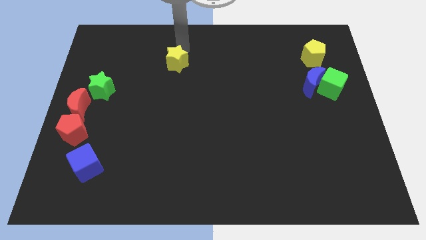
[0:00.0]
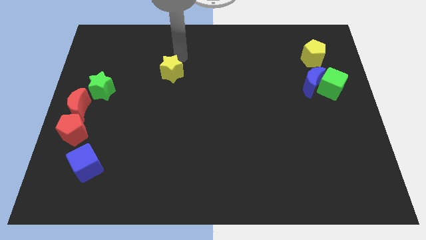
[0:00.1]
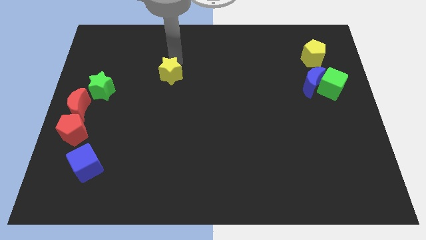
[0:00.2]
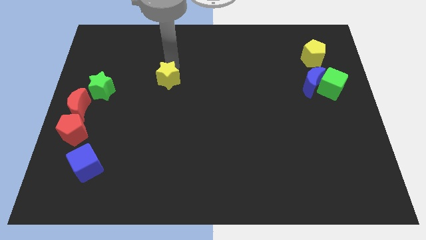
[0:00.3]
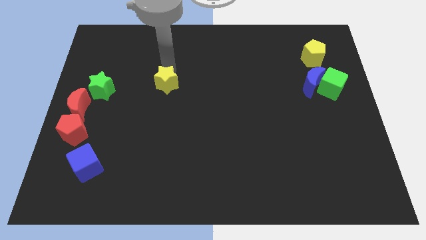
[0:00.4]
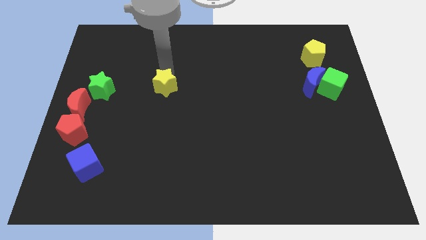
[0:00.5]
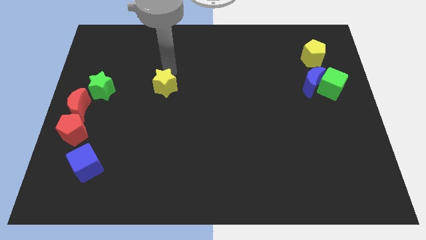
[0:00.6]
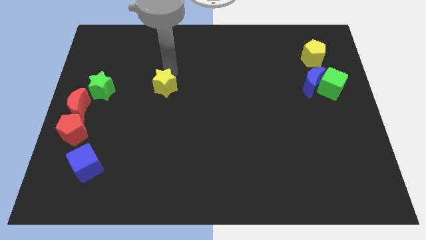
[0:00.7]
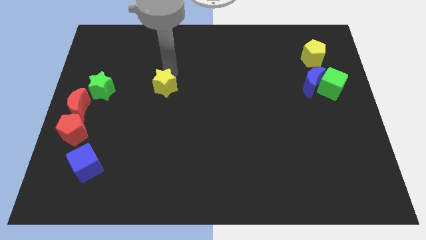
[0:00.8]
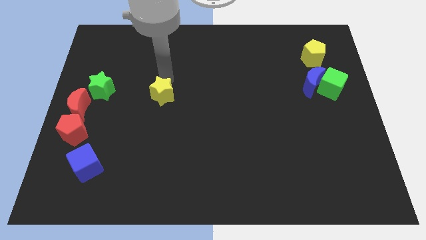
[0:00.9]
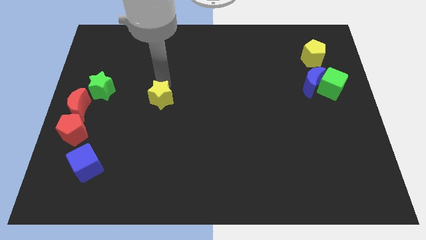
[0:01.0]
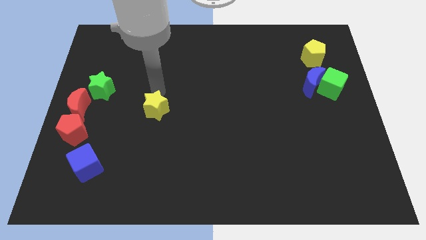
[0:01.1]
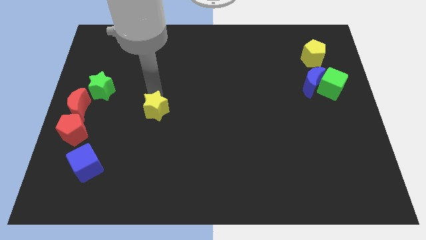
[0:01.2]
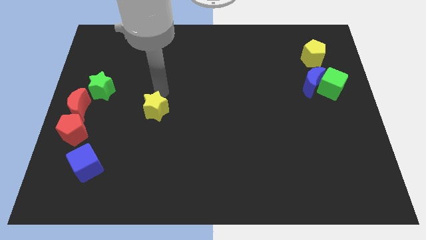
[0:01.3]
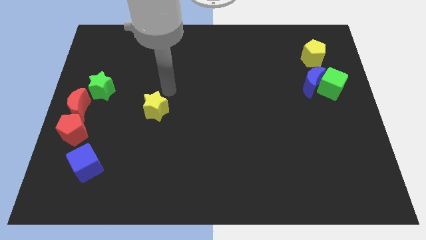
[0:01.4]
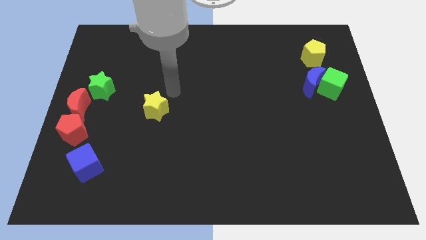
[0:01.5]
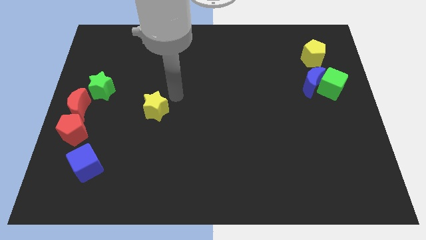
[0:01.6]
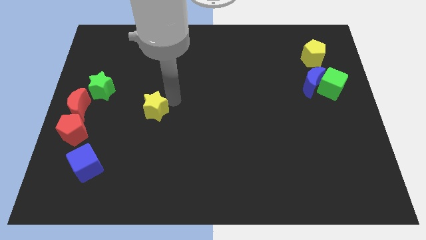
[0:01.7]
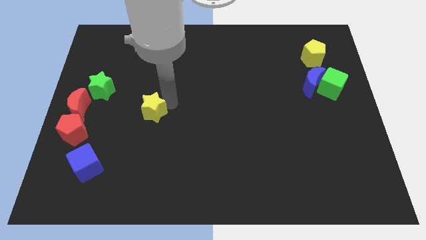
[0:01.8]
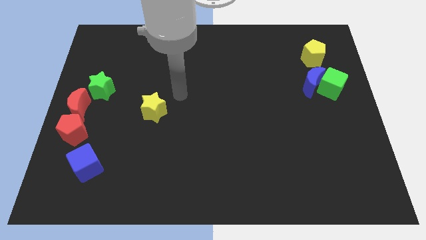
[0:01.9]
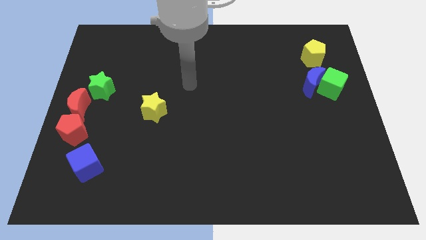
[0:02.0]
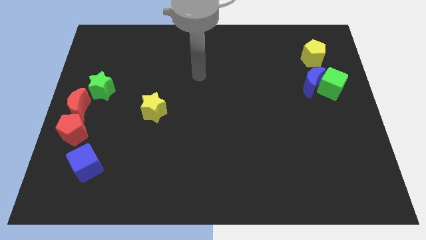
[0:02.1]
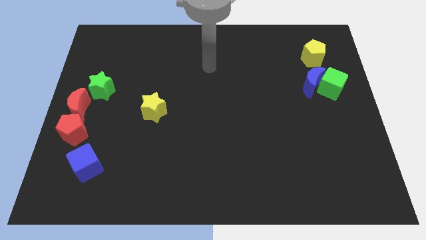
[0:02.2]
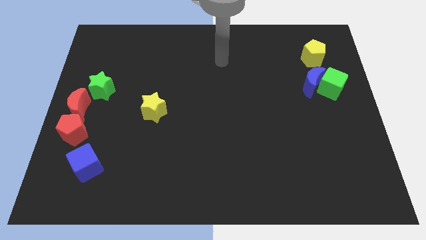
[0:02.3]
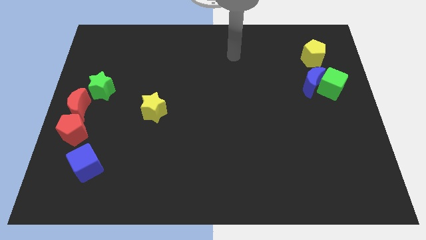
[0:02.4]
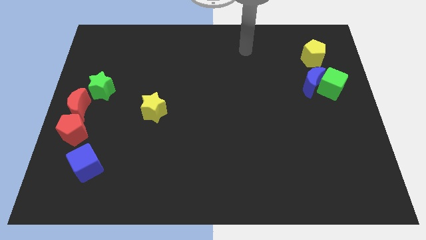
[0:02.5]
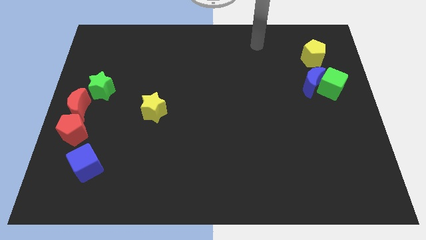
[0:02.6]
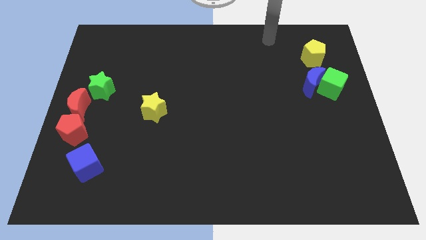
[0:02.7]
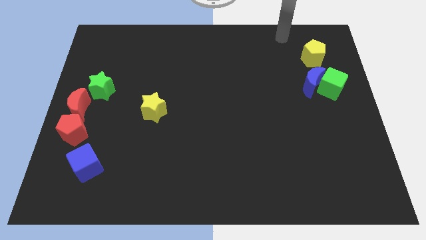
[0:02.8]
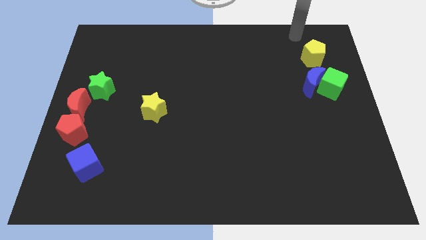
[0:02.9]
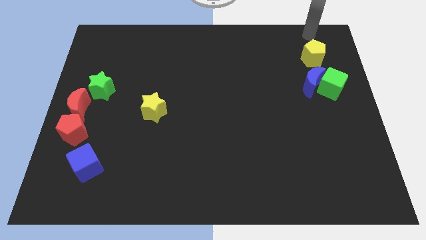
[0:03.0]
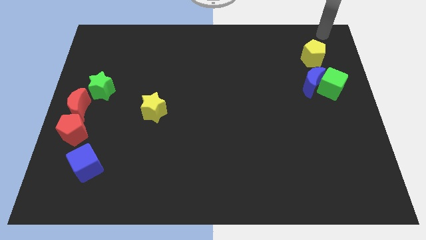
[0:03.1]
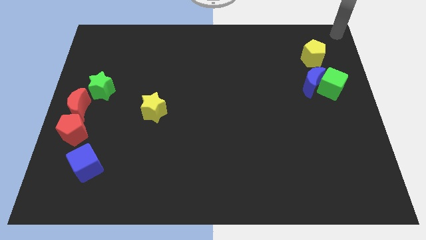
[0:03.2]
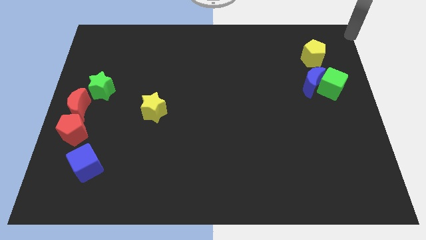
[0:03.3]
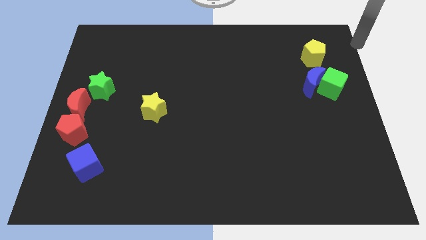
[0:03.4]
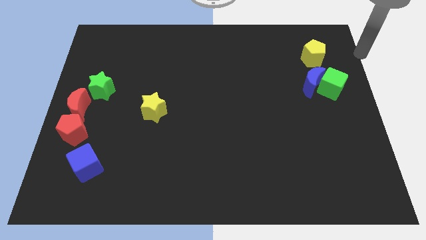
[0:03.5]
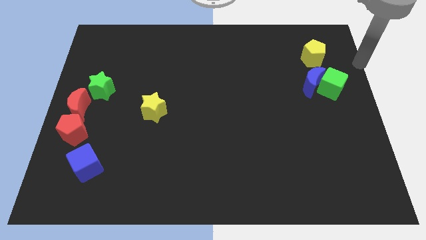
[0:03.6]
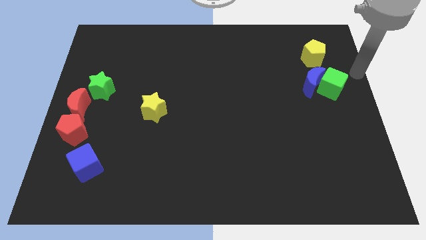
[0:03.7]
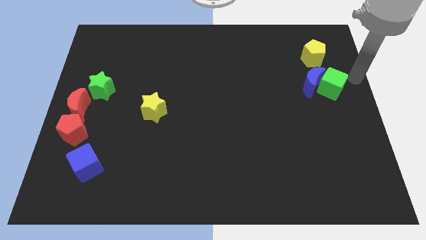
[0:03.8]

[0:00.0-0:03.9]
slide the yellow star towards the bottom

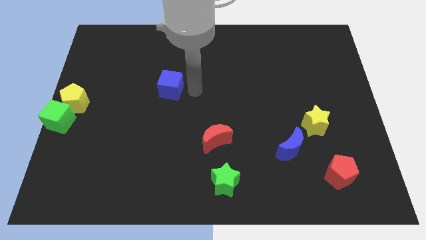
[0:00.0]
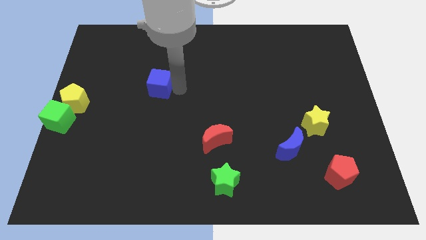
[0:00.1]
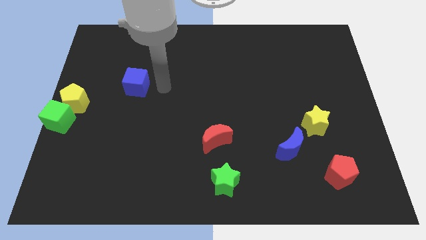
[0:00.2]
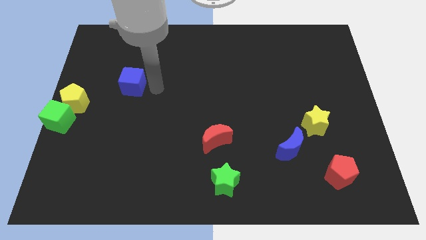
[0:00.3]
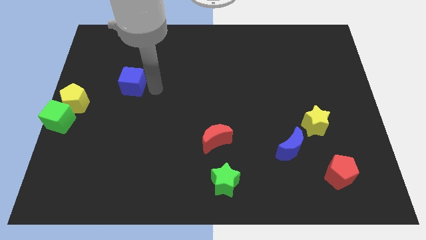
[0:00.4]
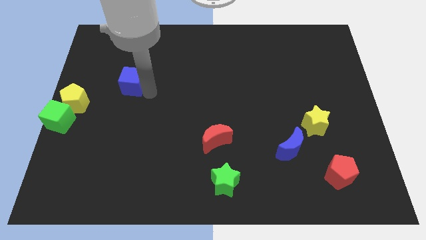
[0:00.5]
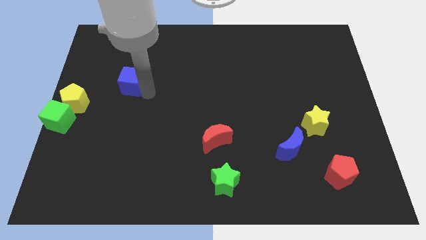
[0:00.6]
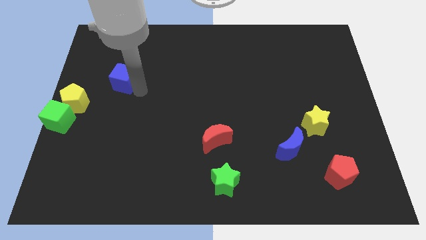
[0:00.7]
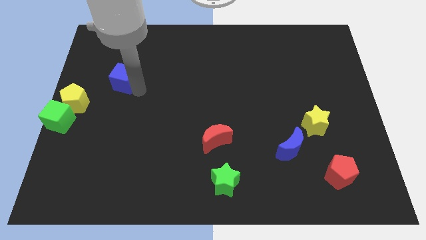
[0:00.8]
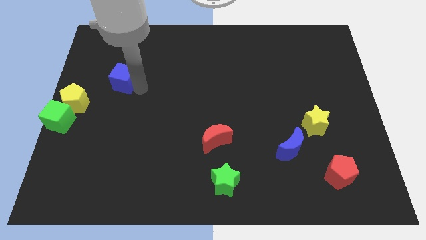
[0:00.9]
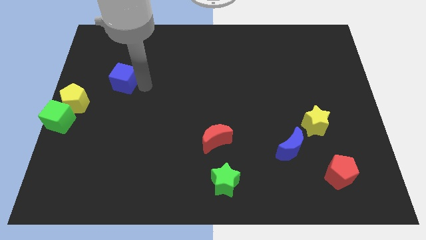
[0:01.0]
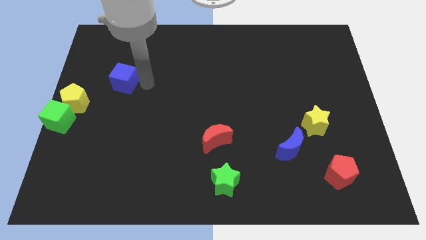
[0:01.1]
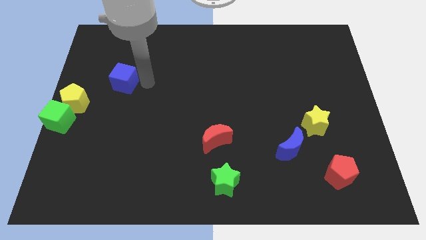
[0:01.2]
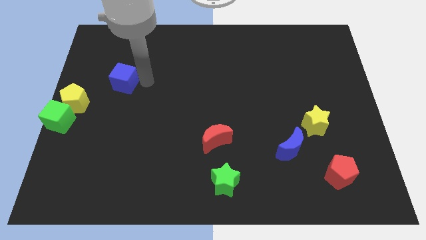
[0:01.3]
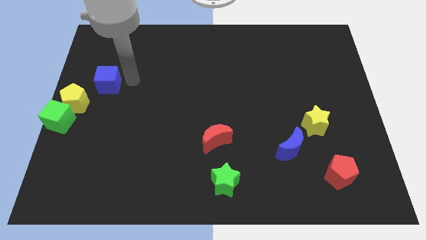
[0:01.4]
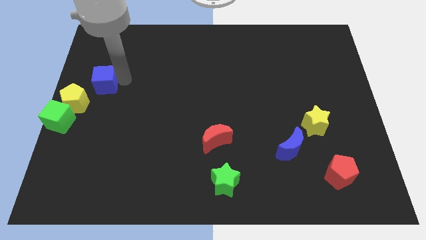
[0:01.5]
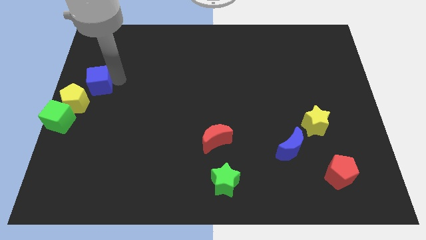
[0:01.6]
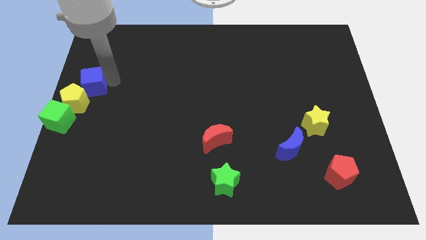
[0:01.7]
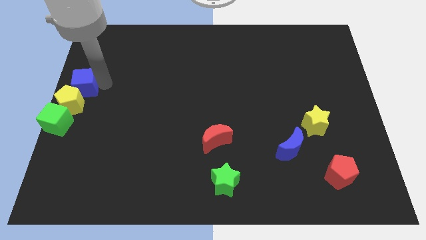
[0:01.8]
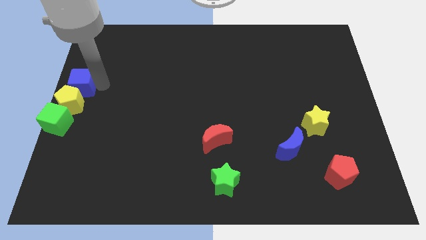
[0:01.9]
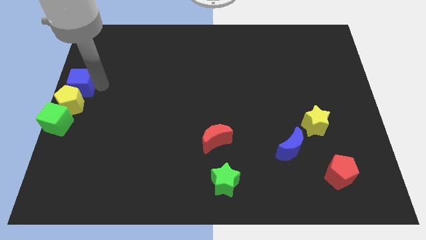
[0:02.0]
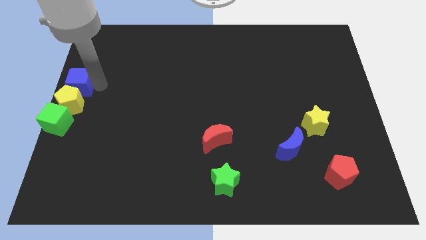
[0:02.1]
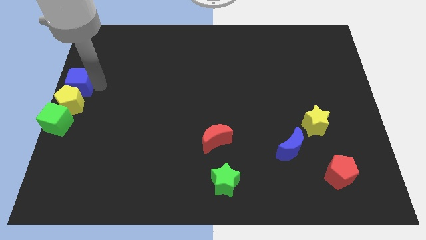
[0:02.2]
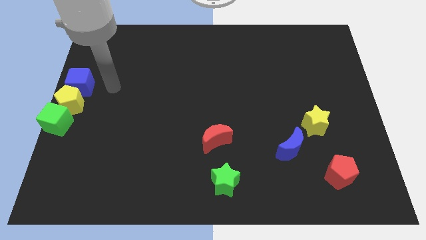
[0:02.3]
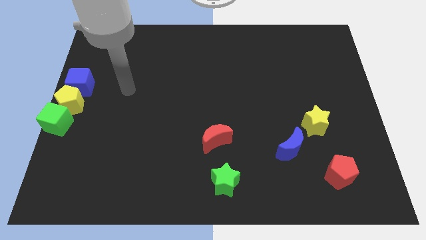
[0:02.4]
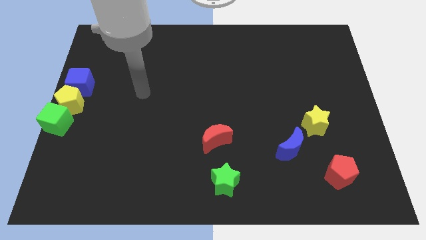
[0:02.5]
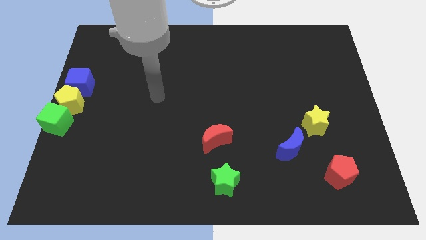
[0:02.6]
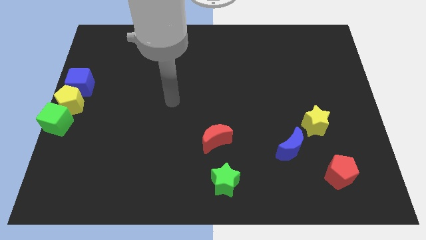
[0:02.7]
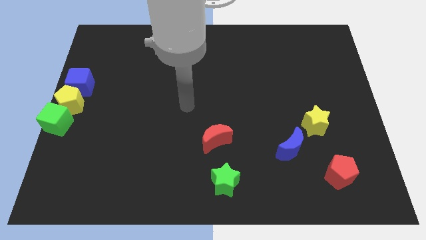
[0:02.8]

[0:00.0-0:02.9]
put blue cube above yellow pentagon

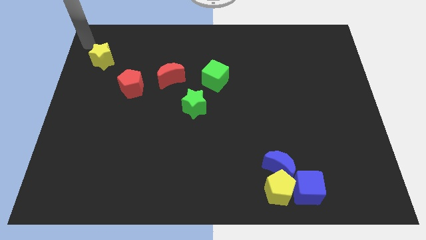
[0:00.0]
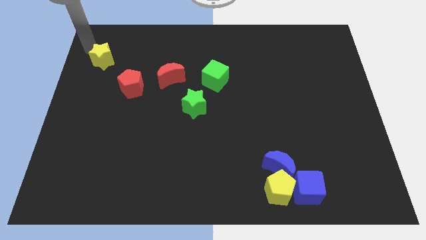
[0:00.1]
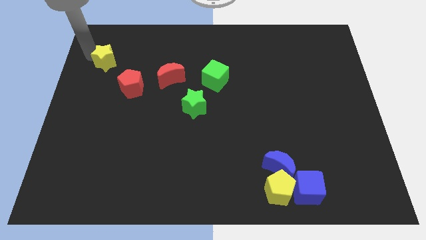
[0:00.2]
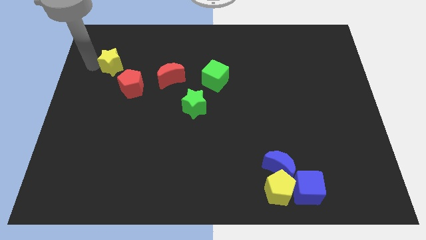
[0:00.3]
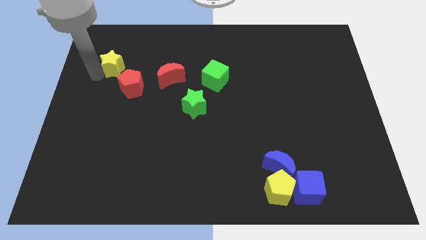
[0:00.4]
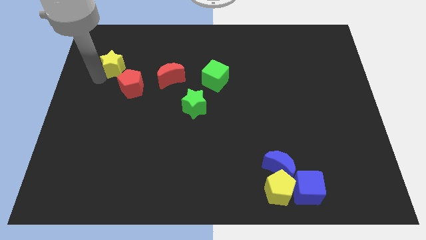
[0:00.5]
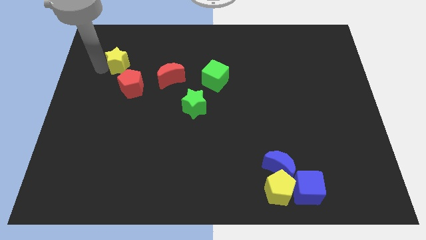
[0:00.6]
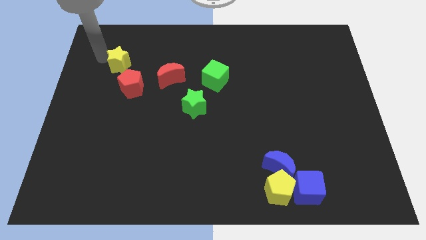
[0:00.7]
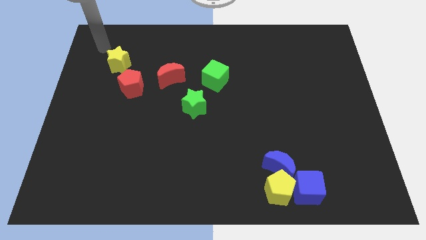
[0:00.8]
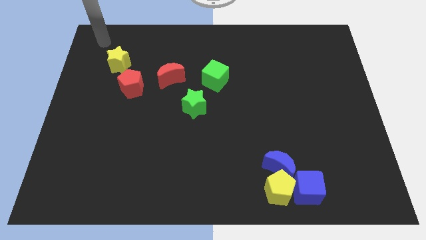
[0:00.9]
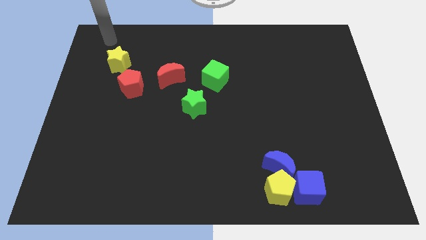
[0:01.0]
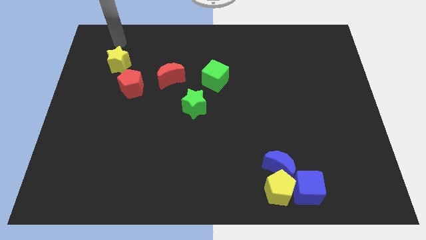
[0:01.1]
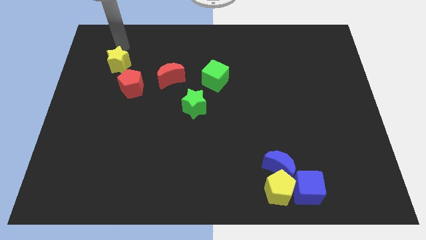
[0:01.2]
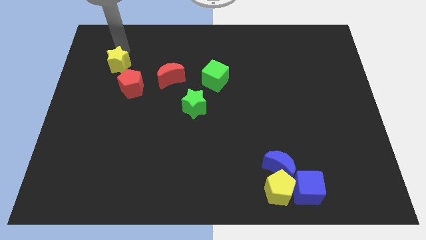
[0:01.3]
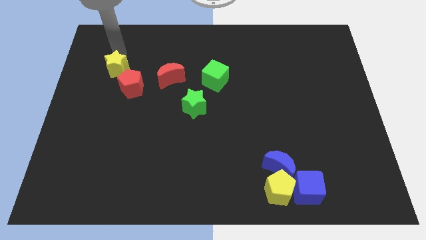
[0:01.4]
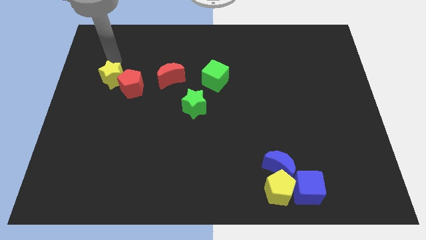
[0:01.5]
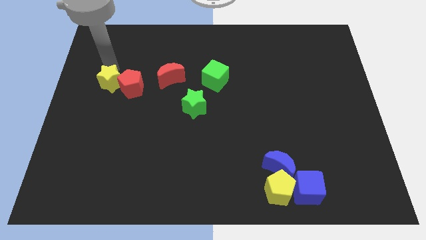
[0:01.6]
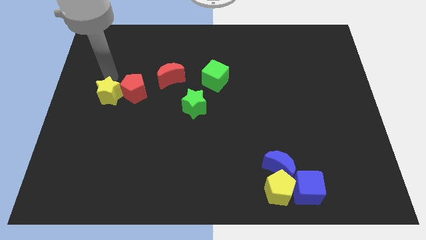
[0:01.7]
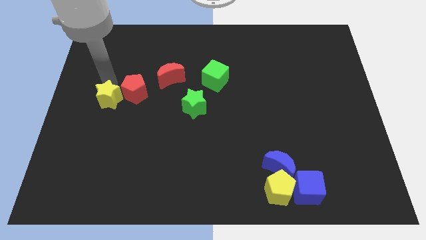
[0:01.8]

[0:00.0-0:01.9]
move the yellow star into the red pentagon

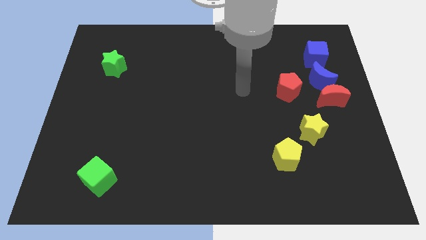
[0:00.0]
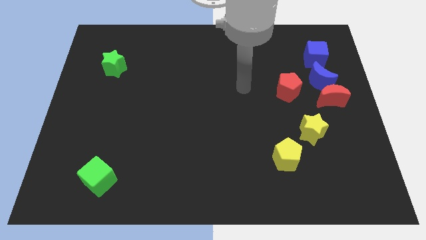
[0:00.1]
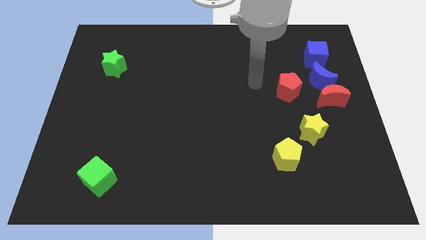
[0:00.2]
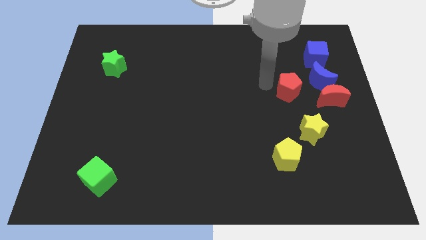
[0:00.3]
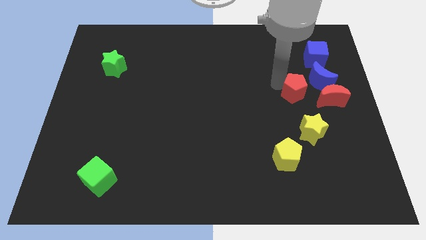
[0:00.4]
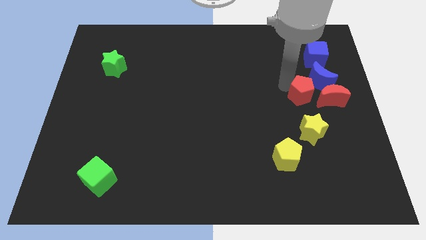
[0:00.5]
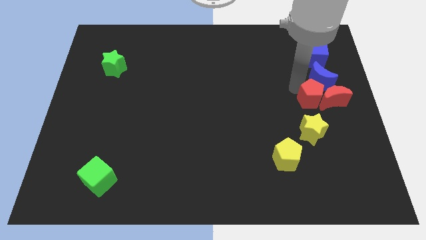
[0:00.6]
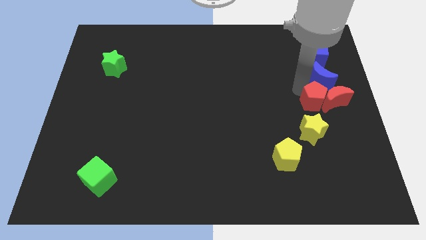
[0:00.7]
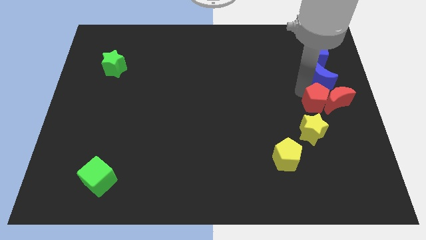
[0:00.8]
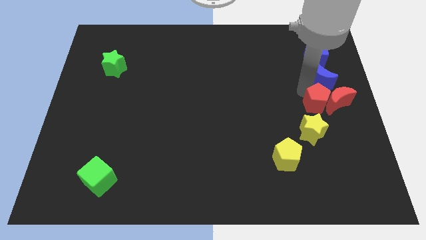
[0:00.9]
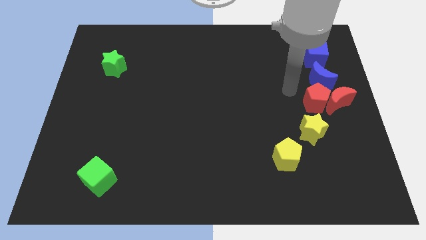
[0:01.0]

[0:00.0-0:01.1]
move the red pentagon into the red moon
